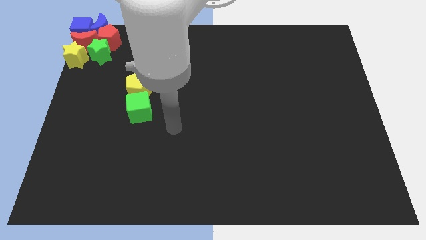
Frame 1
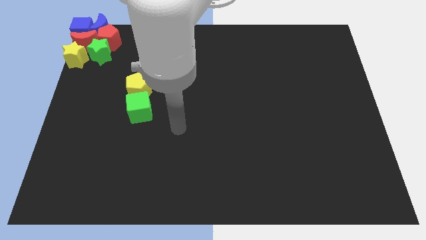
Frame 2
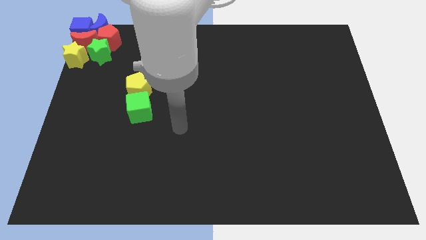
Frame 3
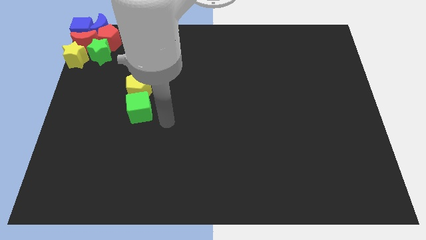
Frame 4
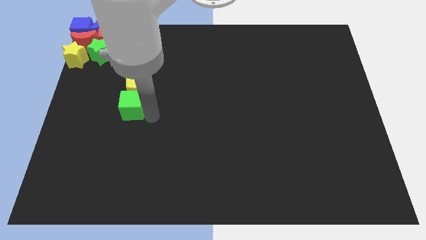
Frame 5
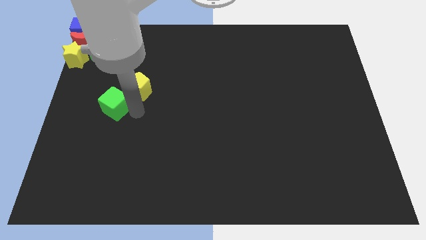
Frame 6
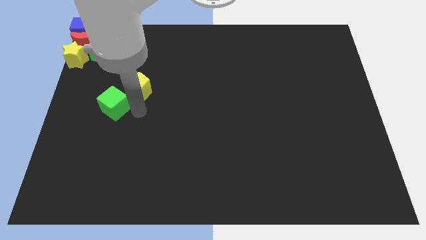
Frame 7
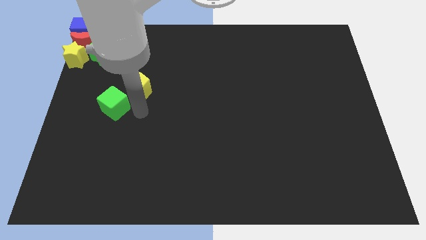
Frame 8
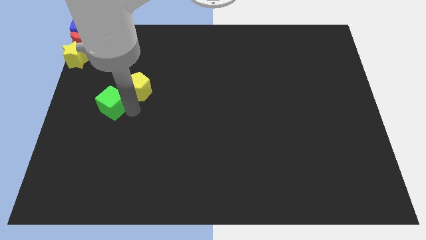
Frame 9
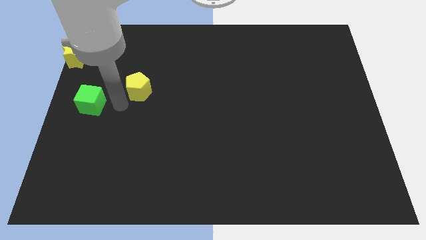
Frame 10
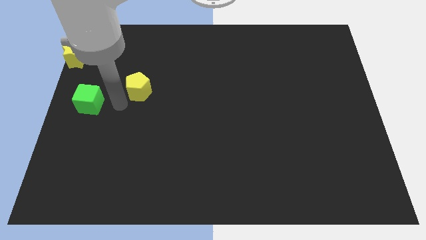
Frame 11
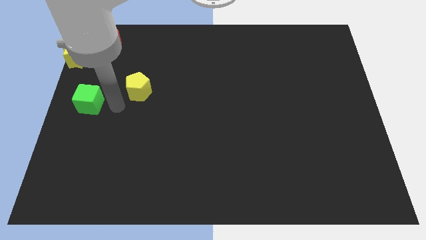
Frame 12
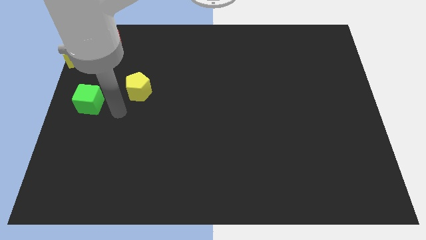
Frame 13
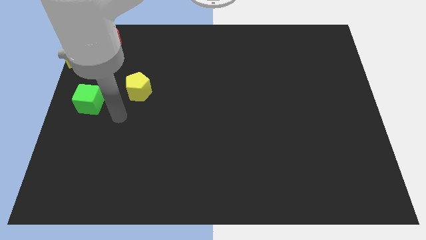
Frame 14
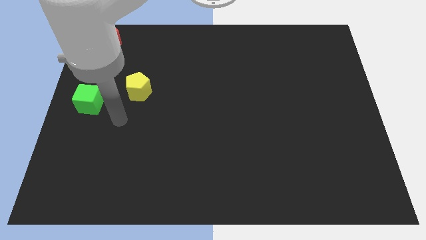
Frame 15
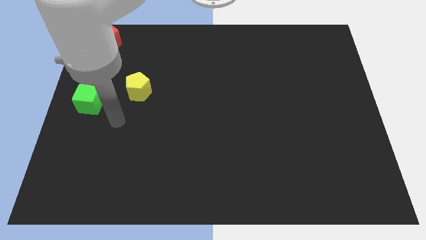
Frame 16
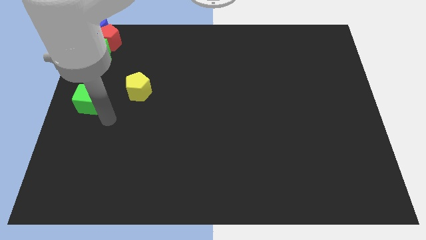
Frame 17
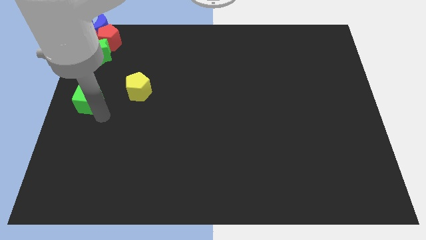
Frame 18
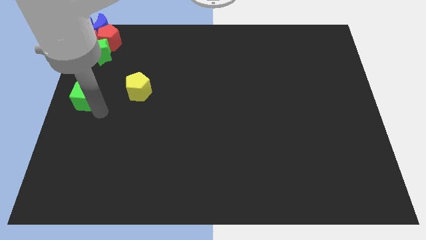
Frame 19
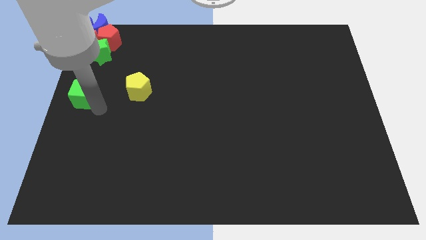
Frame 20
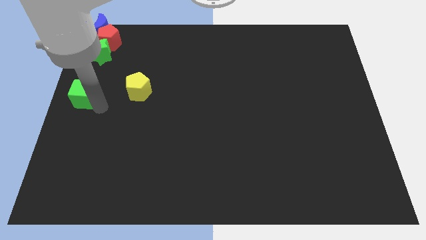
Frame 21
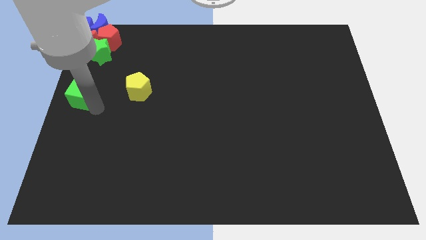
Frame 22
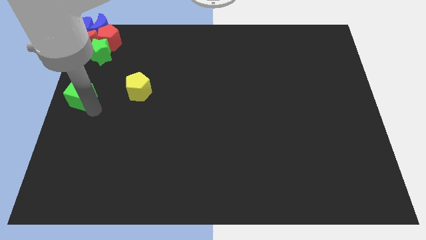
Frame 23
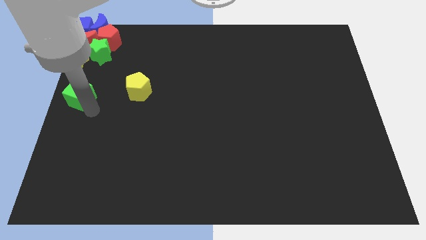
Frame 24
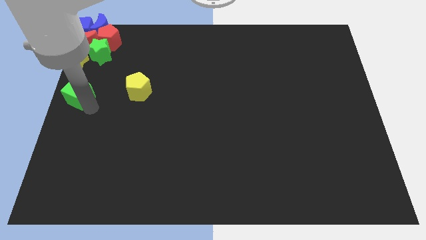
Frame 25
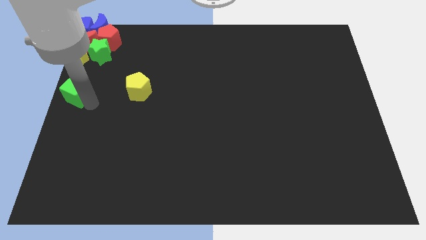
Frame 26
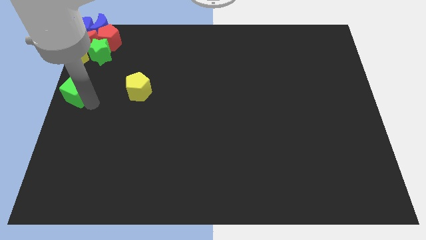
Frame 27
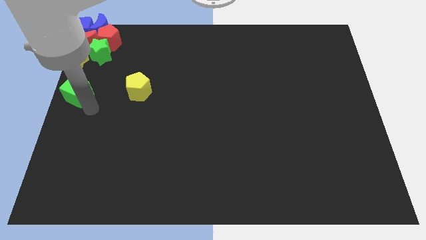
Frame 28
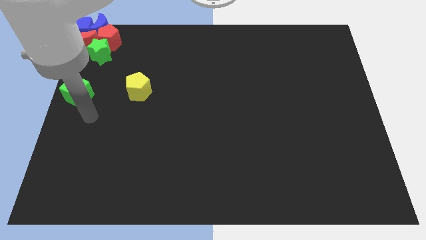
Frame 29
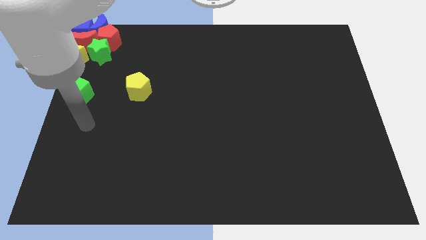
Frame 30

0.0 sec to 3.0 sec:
move the green cube towards the group of blocks

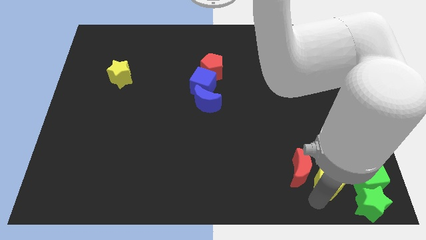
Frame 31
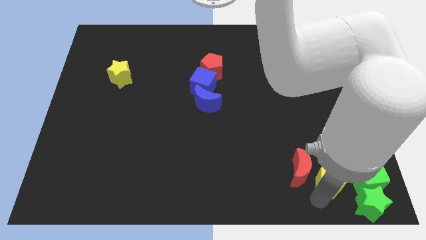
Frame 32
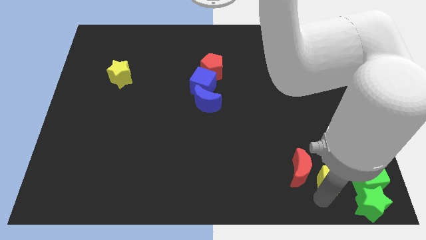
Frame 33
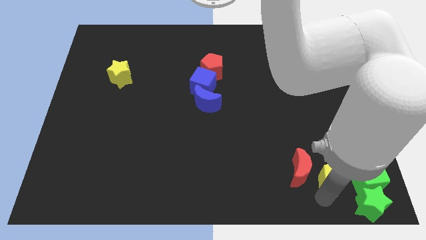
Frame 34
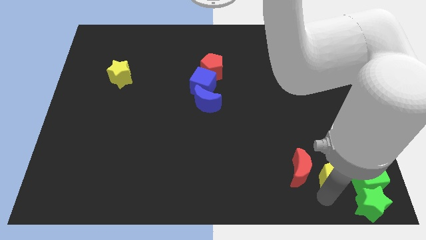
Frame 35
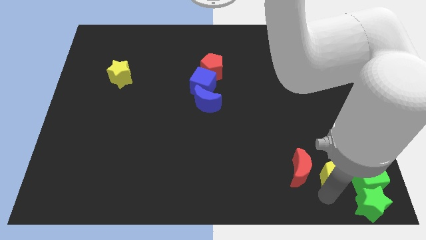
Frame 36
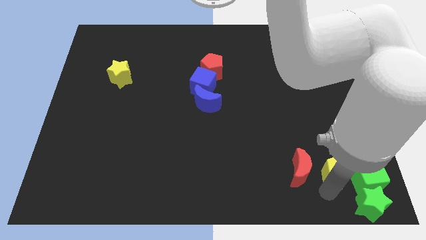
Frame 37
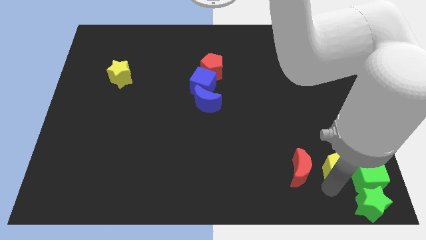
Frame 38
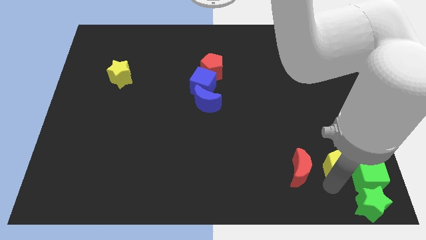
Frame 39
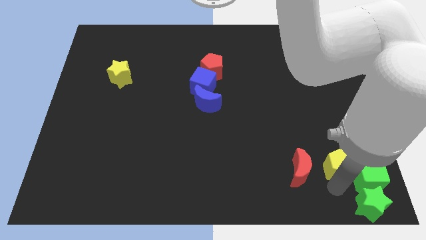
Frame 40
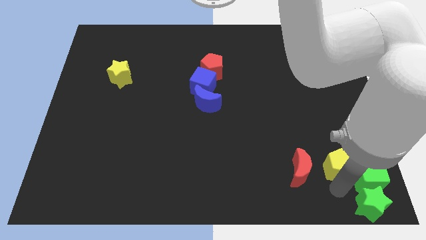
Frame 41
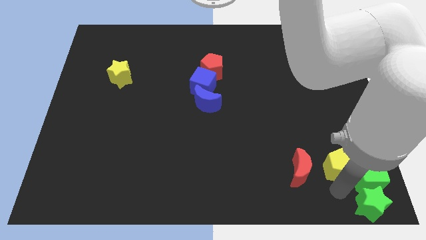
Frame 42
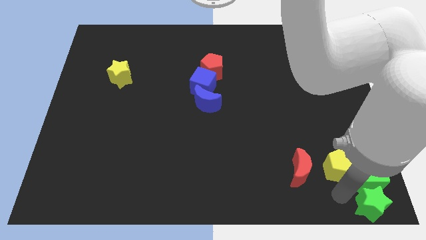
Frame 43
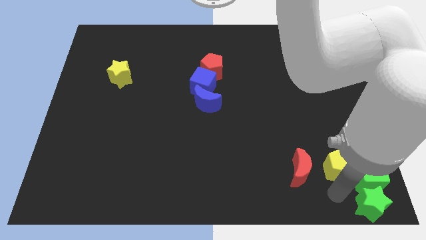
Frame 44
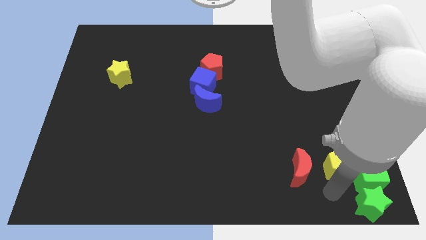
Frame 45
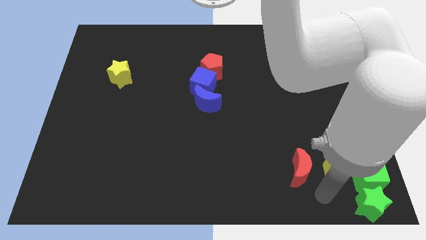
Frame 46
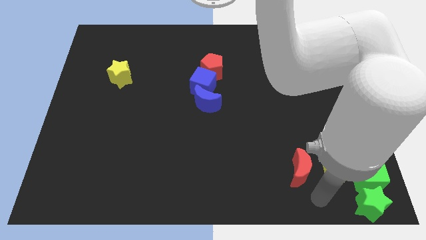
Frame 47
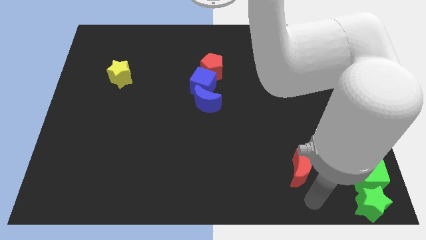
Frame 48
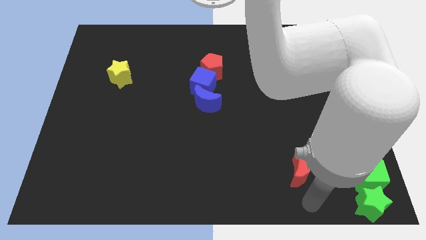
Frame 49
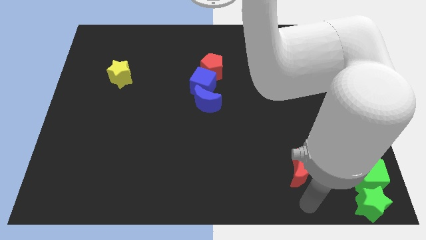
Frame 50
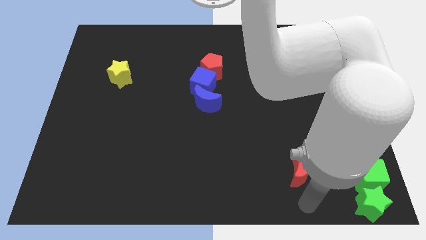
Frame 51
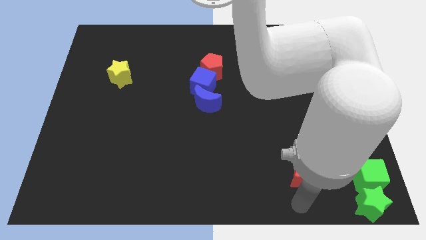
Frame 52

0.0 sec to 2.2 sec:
place the yellow pentagon to the left side of green cube

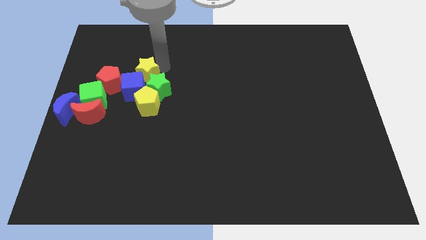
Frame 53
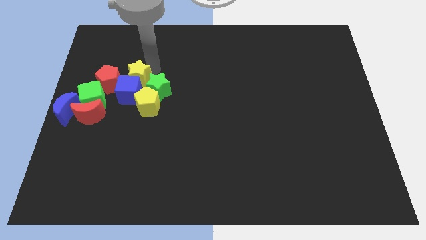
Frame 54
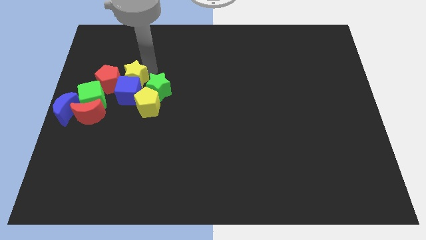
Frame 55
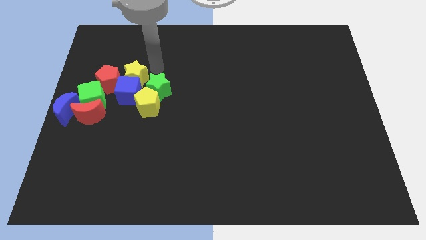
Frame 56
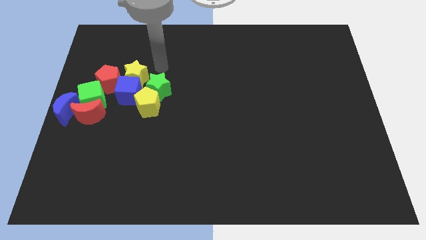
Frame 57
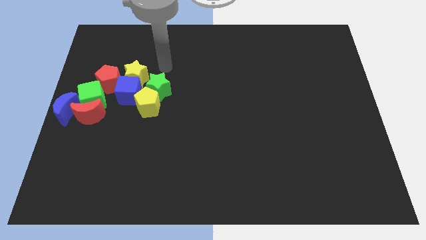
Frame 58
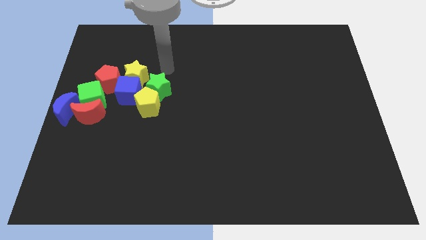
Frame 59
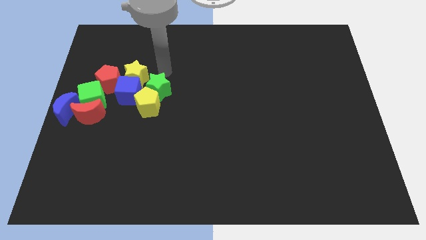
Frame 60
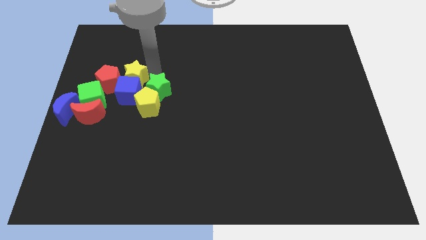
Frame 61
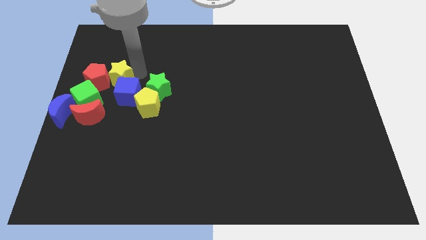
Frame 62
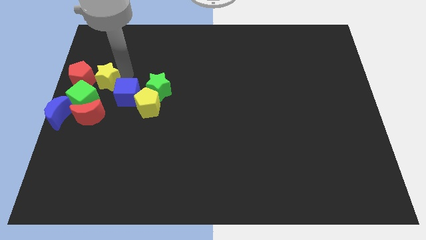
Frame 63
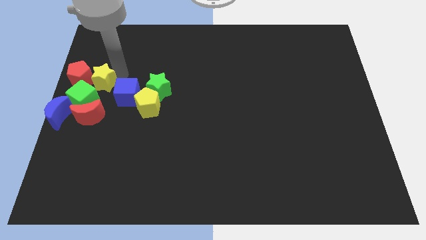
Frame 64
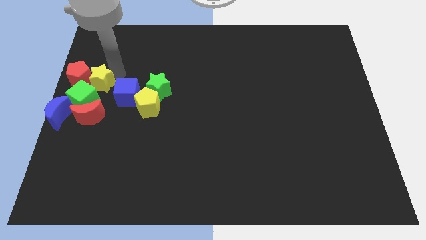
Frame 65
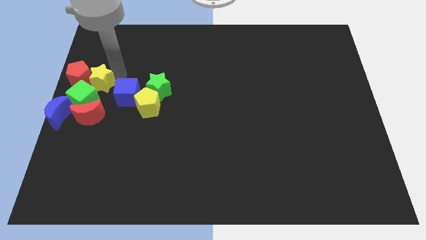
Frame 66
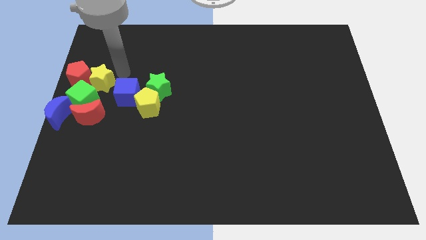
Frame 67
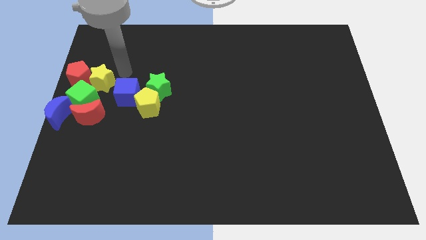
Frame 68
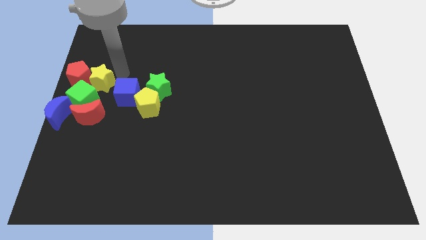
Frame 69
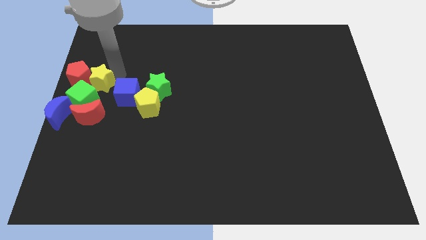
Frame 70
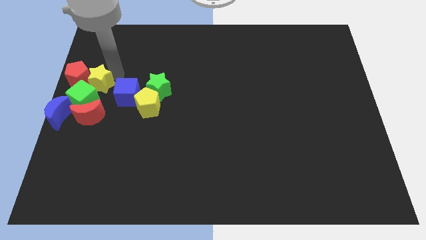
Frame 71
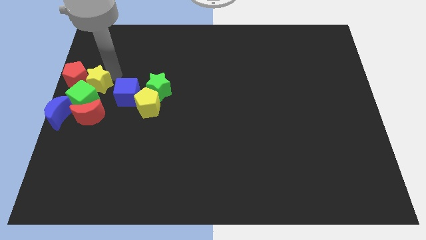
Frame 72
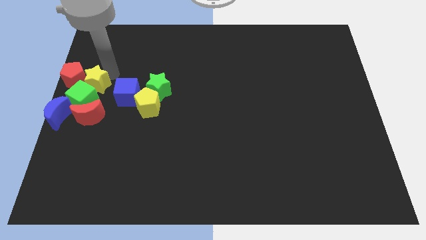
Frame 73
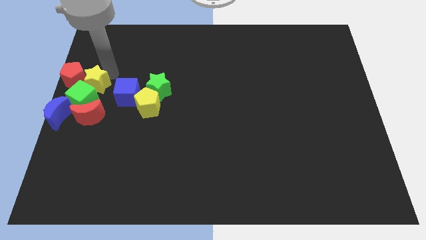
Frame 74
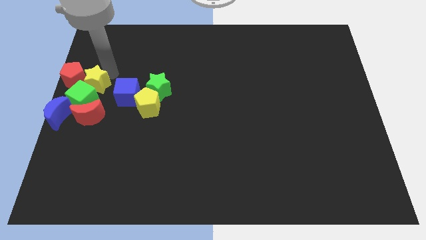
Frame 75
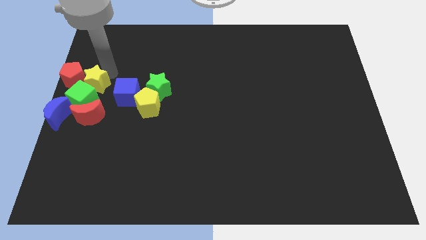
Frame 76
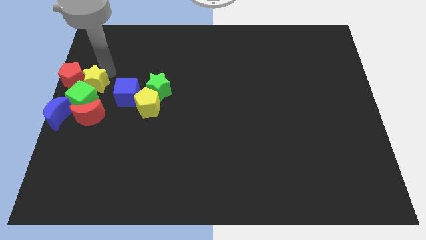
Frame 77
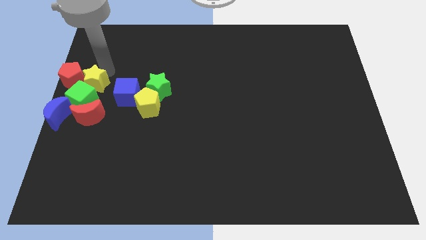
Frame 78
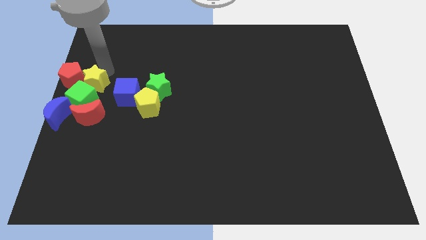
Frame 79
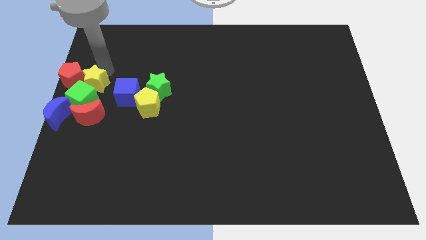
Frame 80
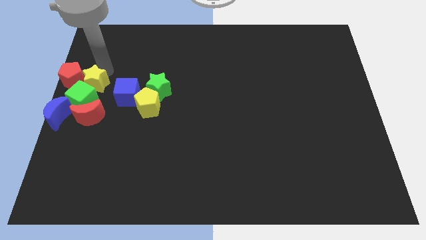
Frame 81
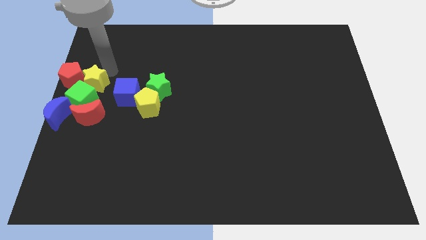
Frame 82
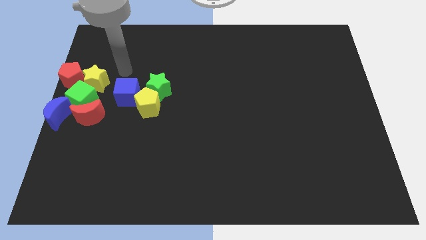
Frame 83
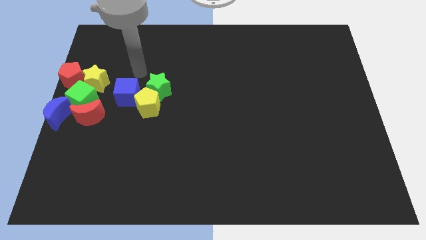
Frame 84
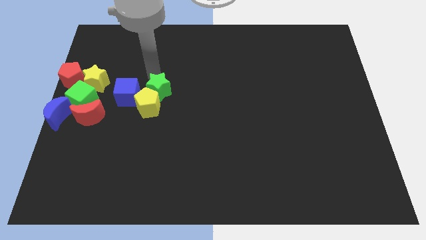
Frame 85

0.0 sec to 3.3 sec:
move the red pentagon and yellow star to the top side of the green cube

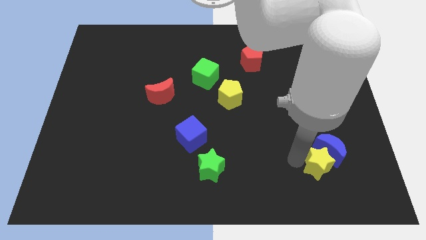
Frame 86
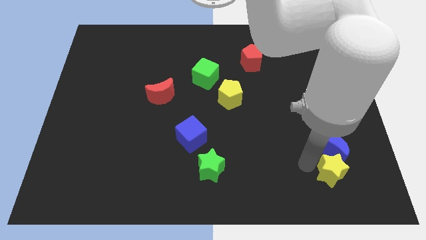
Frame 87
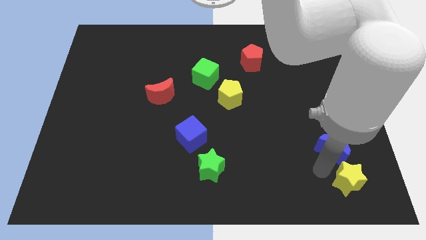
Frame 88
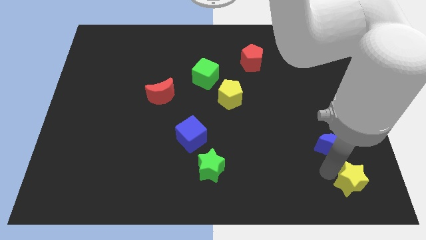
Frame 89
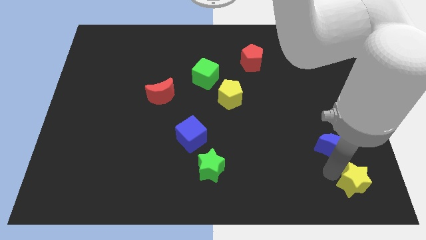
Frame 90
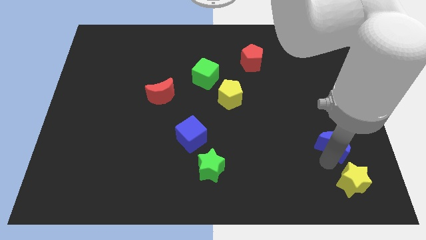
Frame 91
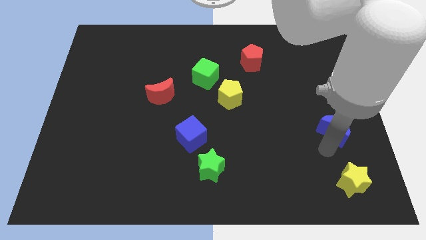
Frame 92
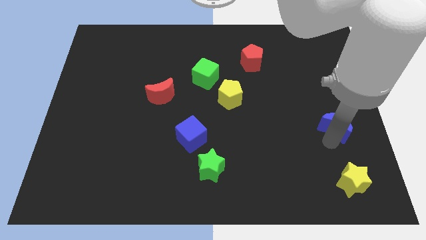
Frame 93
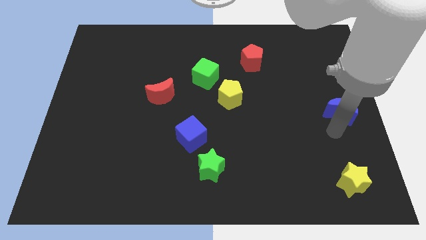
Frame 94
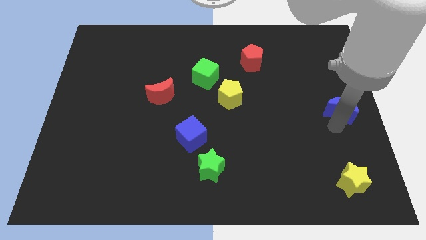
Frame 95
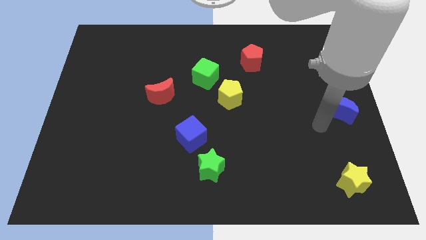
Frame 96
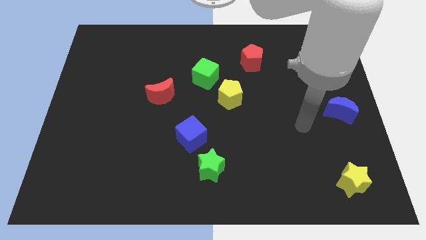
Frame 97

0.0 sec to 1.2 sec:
move the blue crescent to the center right
